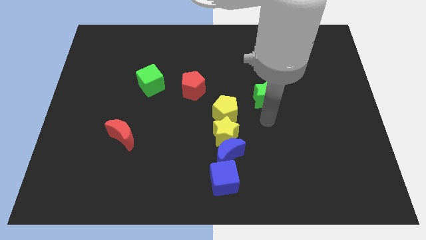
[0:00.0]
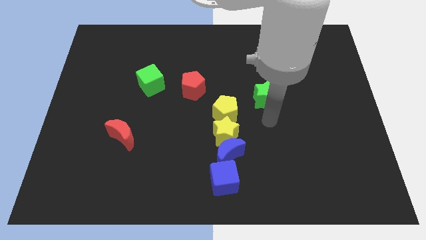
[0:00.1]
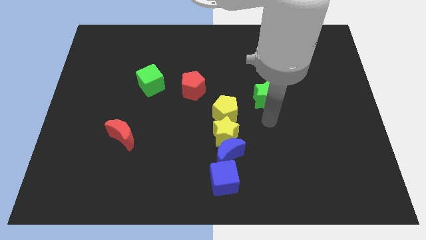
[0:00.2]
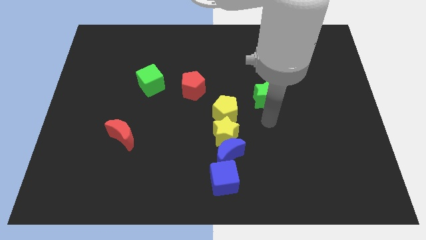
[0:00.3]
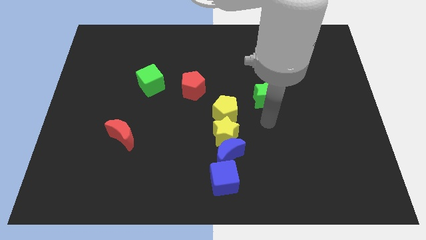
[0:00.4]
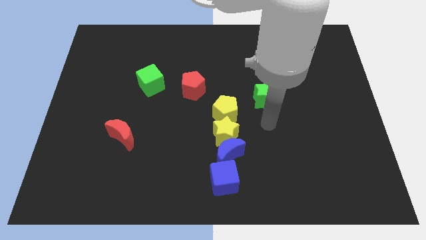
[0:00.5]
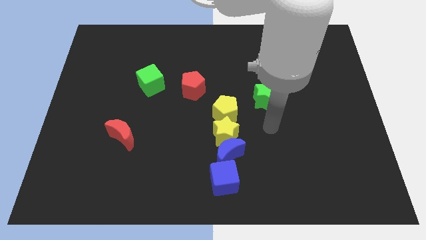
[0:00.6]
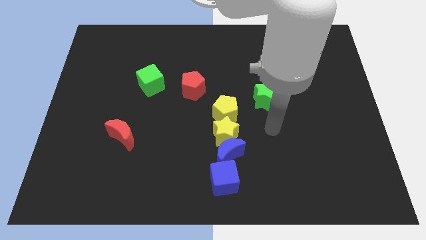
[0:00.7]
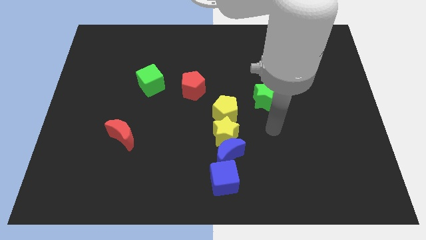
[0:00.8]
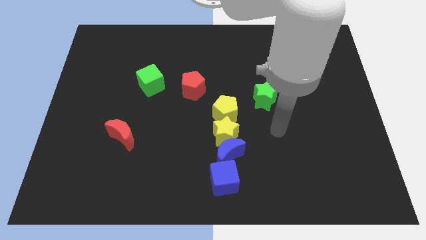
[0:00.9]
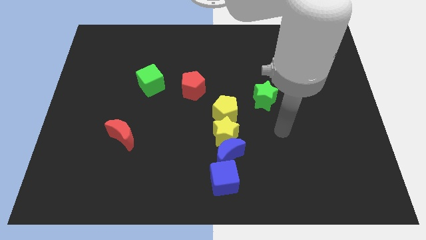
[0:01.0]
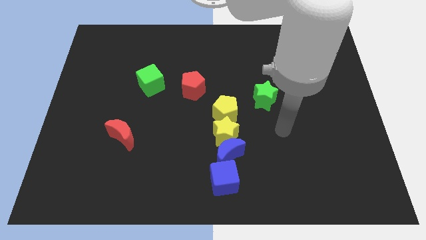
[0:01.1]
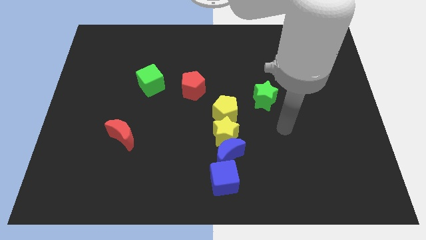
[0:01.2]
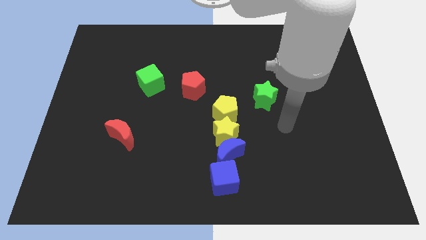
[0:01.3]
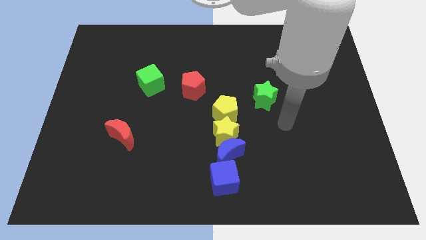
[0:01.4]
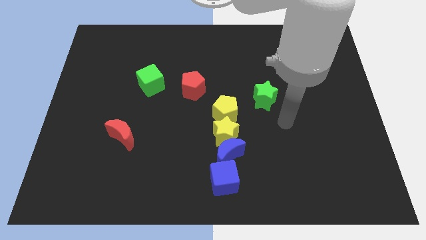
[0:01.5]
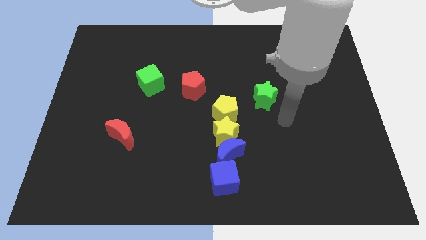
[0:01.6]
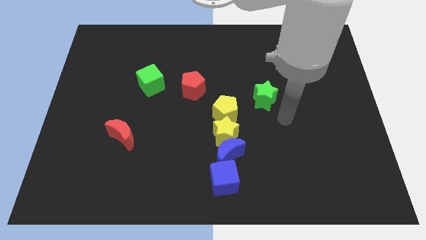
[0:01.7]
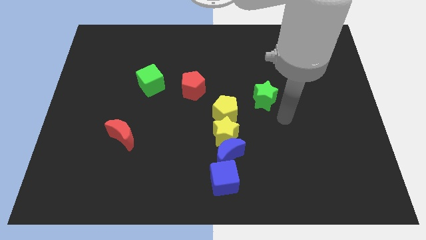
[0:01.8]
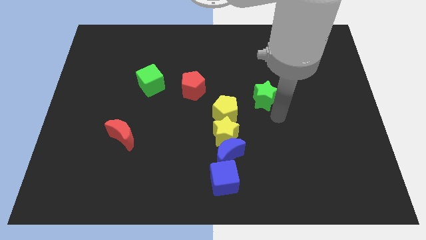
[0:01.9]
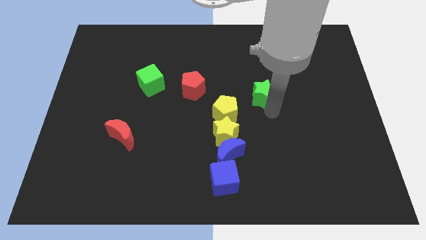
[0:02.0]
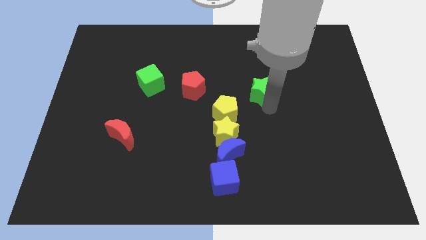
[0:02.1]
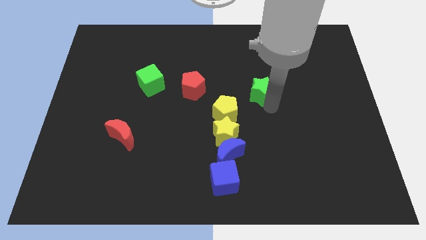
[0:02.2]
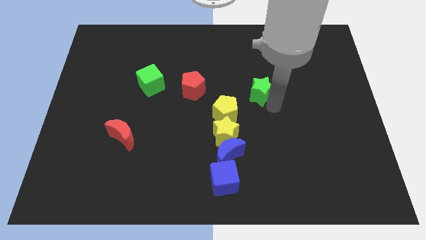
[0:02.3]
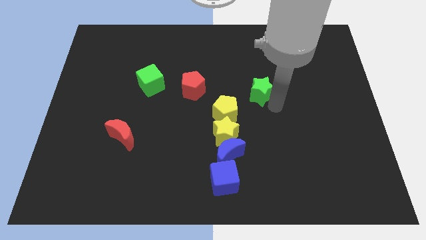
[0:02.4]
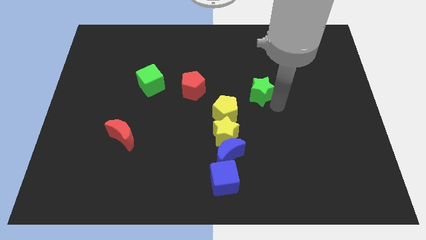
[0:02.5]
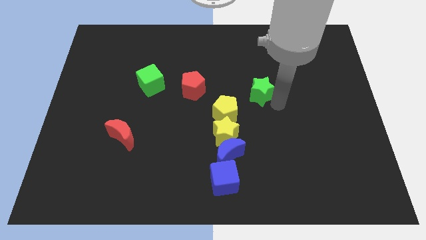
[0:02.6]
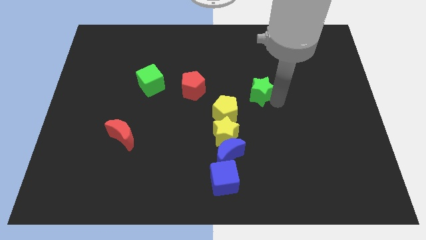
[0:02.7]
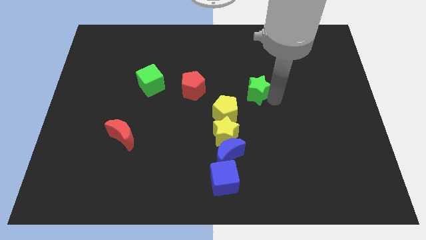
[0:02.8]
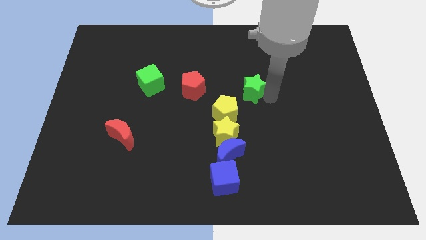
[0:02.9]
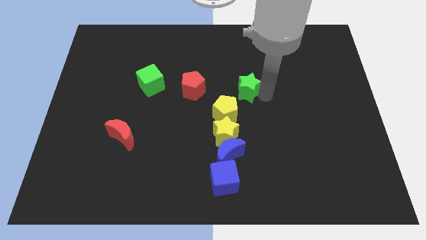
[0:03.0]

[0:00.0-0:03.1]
move the green star slightly to the top right of the yellow pentagon

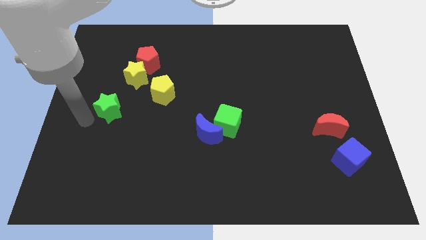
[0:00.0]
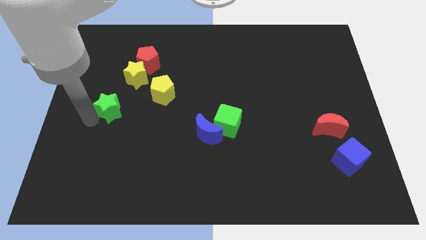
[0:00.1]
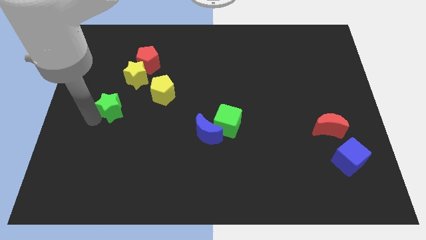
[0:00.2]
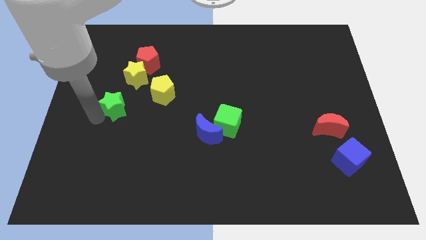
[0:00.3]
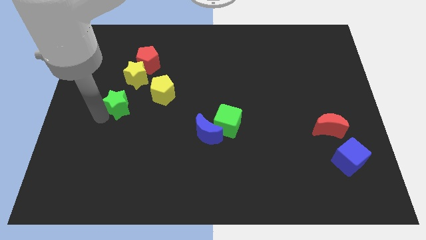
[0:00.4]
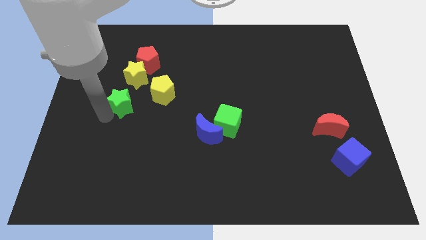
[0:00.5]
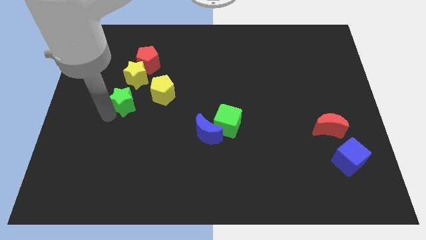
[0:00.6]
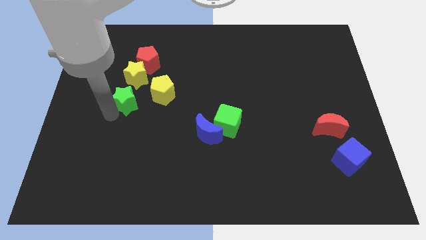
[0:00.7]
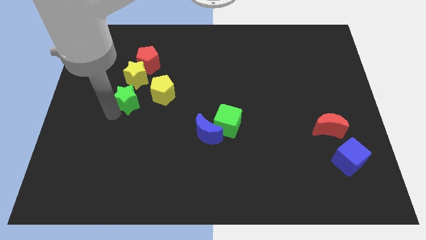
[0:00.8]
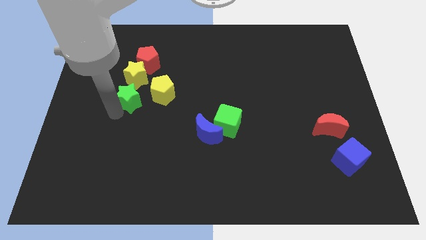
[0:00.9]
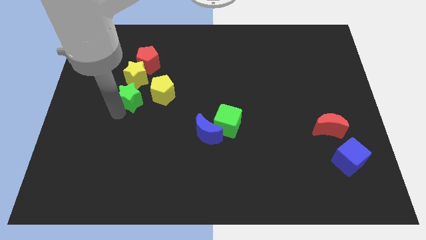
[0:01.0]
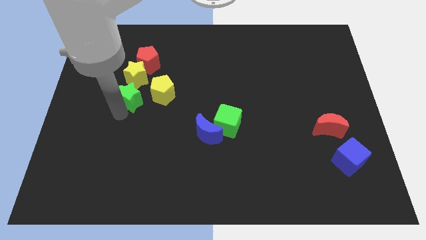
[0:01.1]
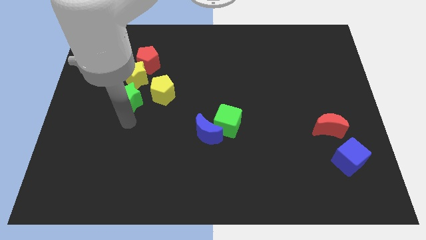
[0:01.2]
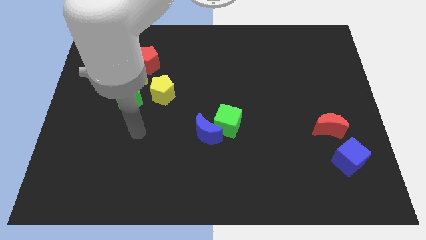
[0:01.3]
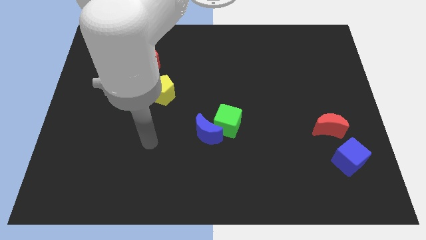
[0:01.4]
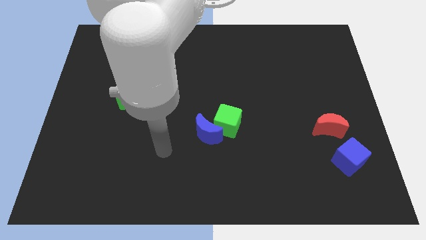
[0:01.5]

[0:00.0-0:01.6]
move the green star to the bottom side of the yellow star

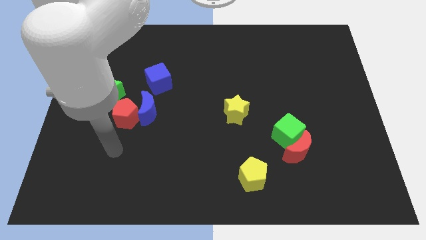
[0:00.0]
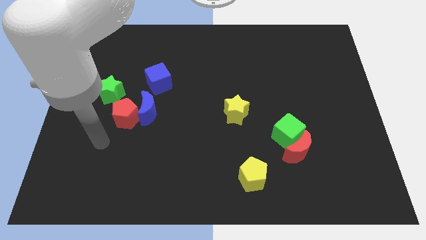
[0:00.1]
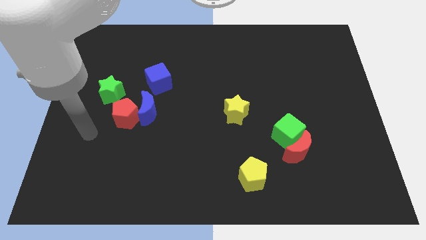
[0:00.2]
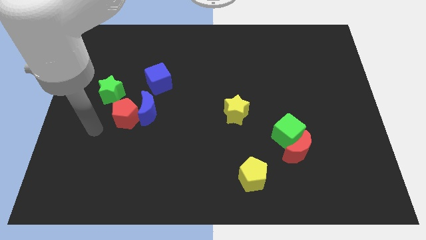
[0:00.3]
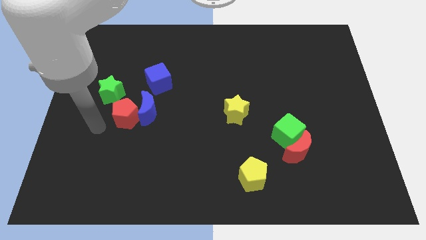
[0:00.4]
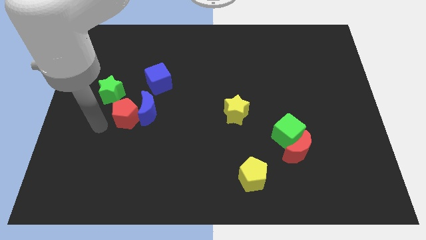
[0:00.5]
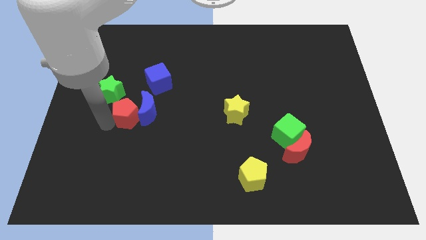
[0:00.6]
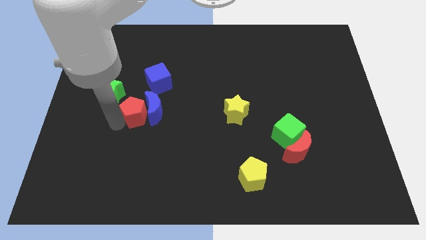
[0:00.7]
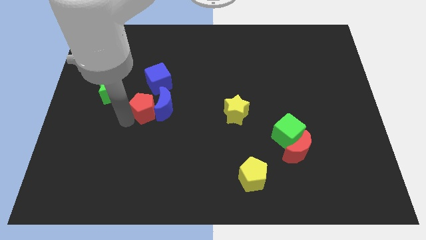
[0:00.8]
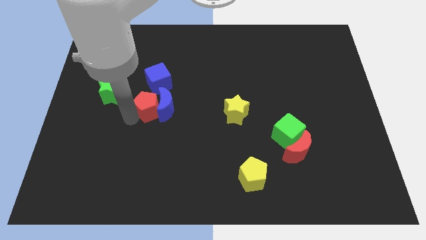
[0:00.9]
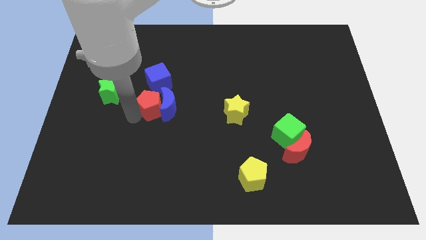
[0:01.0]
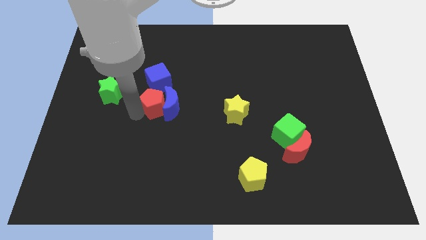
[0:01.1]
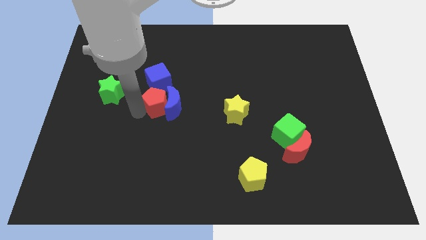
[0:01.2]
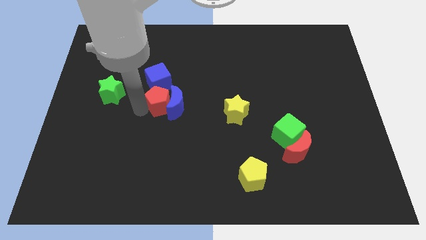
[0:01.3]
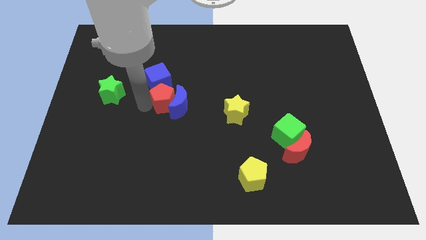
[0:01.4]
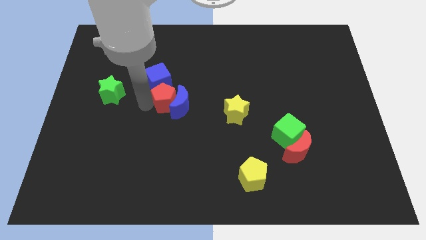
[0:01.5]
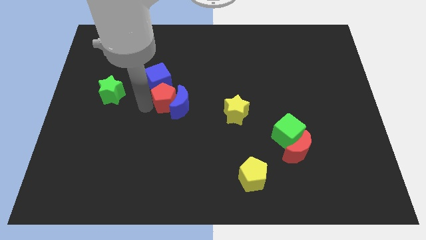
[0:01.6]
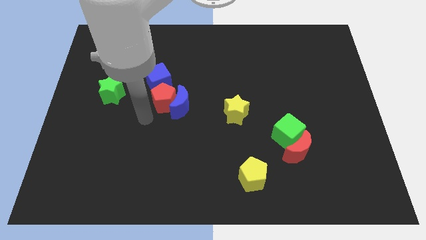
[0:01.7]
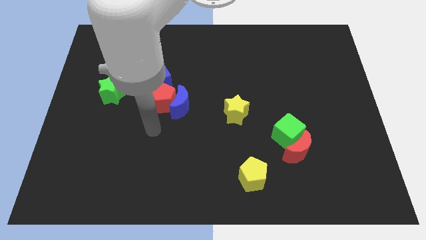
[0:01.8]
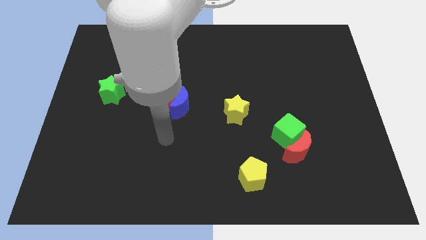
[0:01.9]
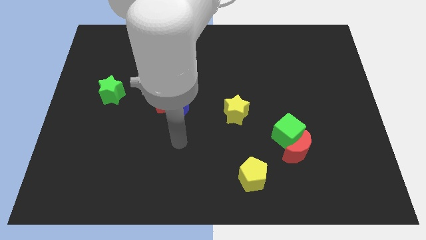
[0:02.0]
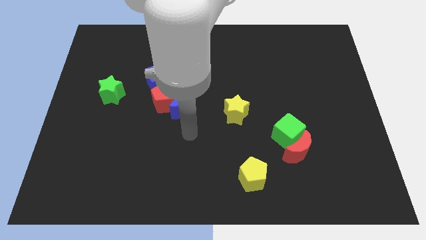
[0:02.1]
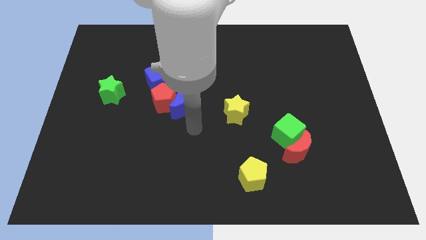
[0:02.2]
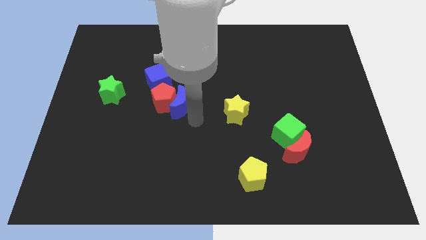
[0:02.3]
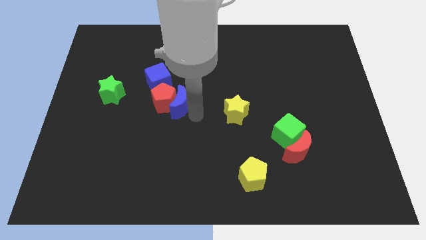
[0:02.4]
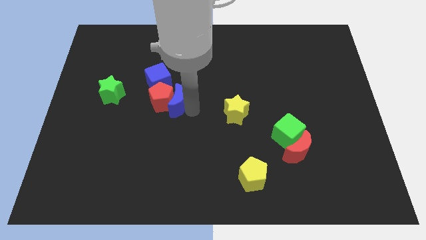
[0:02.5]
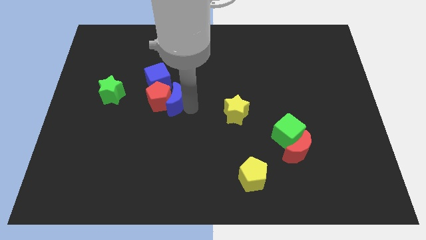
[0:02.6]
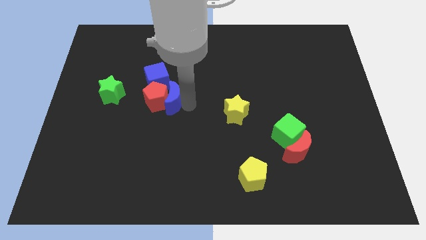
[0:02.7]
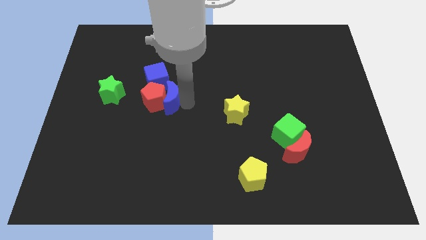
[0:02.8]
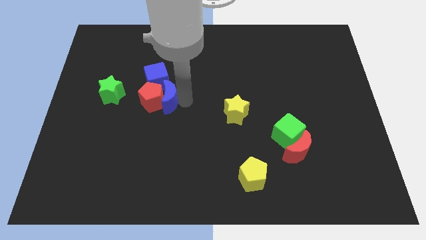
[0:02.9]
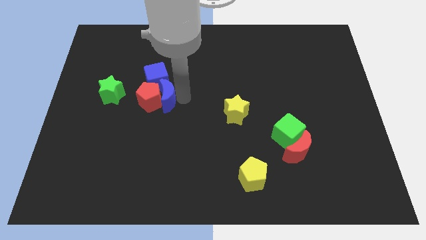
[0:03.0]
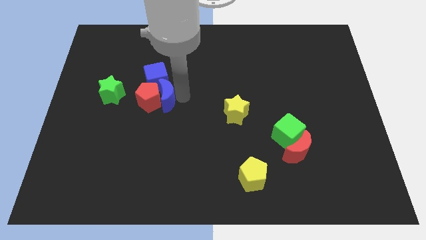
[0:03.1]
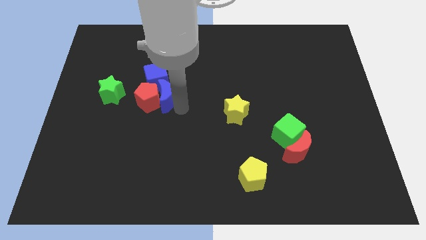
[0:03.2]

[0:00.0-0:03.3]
push red pentagon and blue moon into blue cube

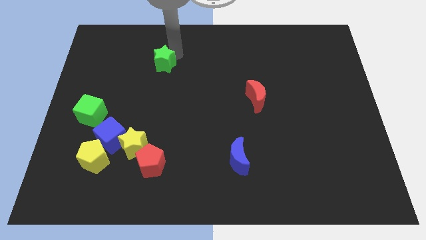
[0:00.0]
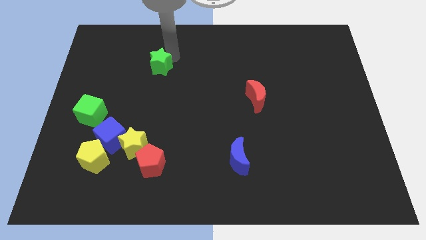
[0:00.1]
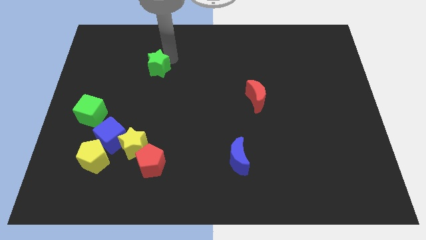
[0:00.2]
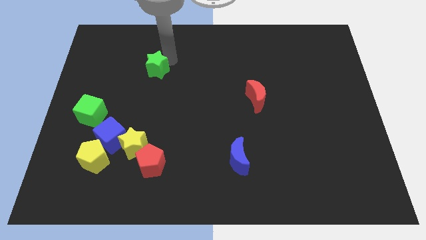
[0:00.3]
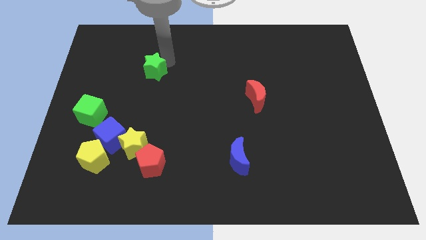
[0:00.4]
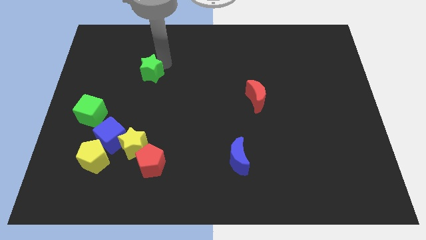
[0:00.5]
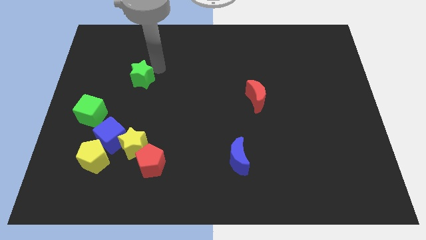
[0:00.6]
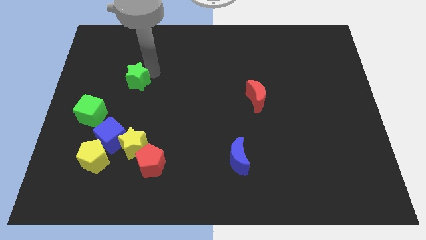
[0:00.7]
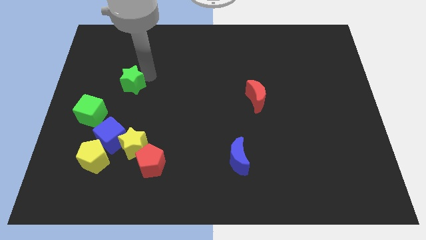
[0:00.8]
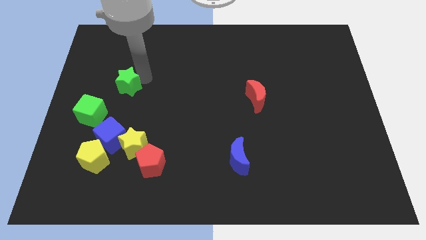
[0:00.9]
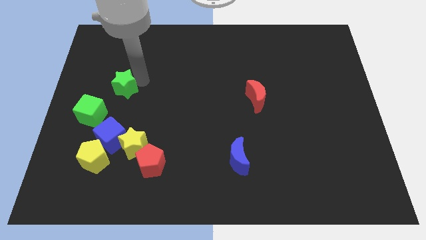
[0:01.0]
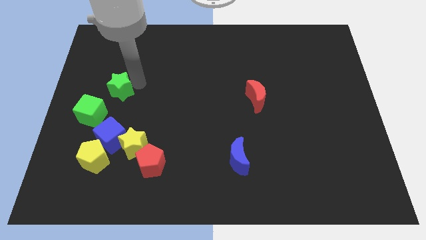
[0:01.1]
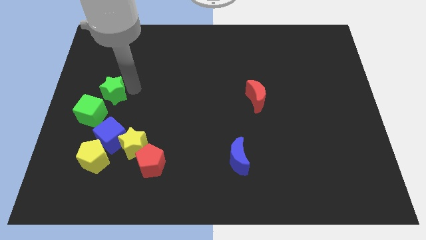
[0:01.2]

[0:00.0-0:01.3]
push the green star towards green cube
